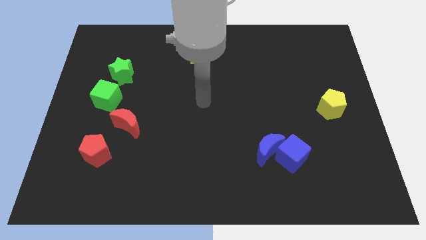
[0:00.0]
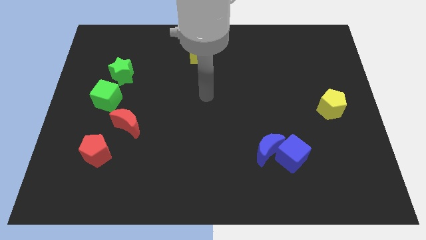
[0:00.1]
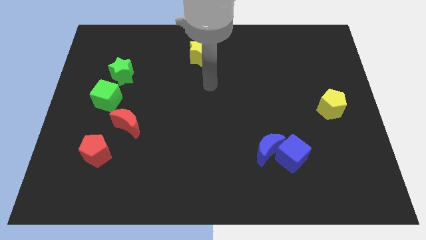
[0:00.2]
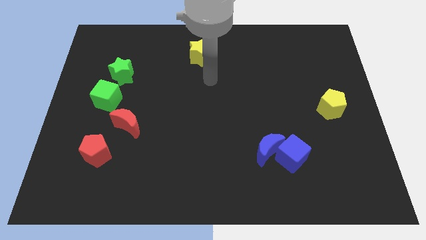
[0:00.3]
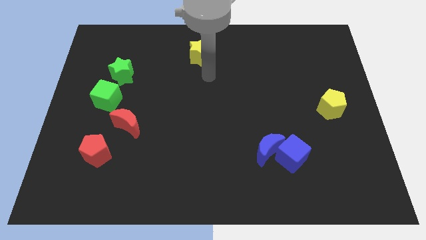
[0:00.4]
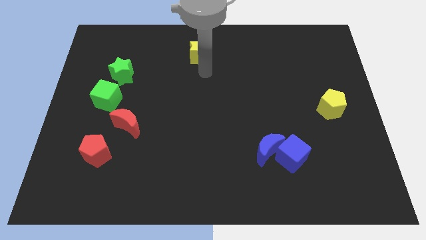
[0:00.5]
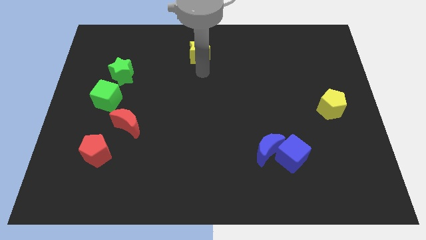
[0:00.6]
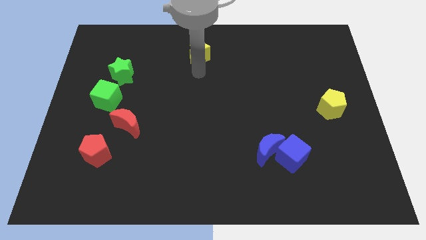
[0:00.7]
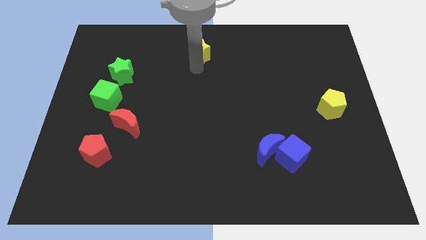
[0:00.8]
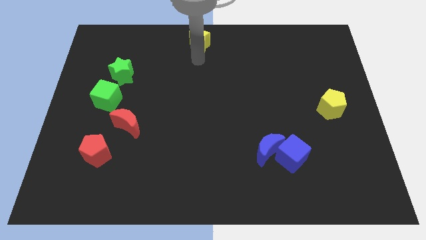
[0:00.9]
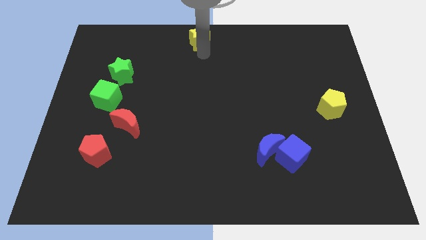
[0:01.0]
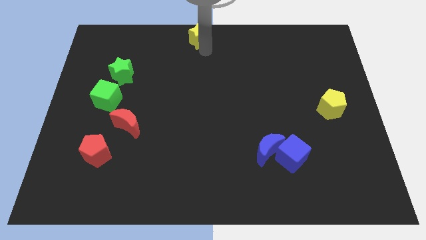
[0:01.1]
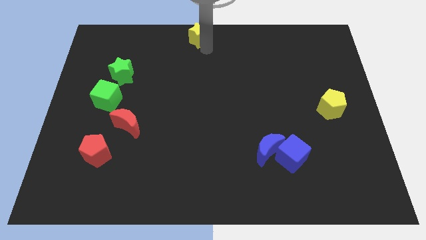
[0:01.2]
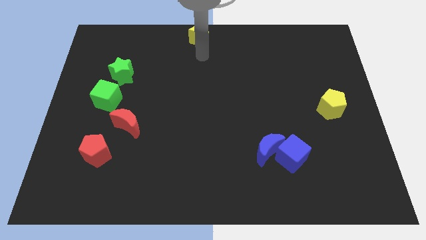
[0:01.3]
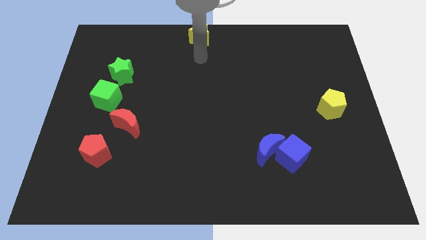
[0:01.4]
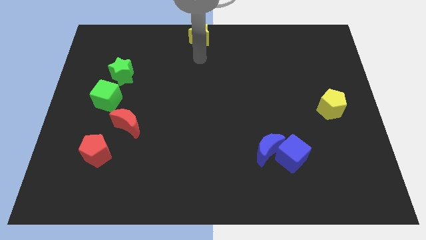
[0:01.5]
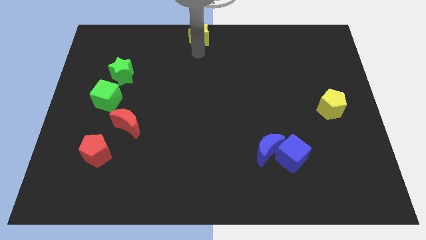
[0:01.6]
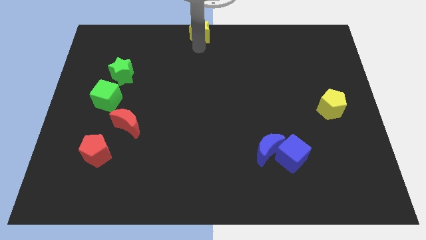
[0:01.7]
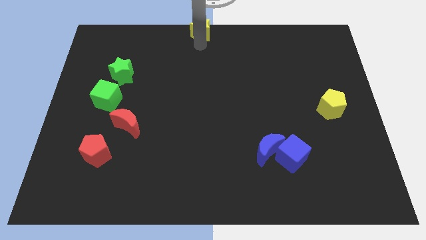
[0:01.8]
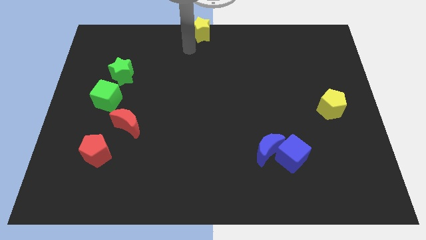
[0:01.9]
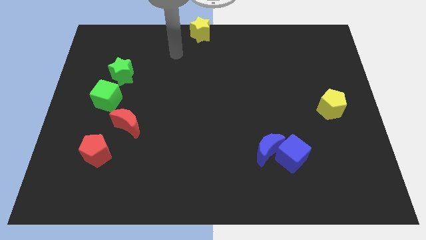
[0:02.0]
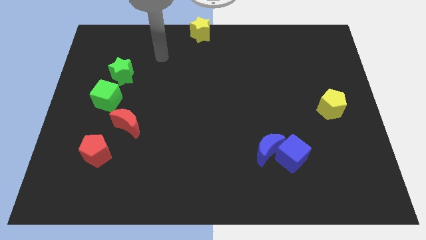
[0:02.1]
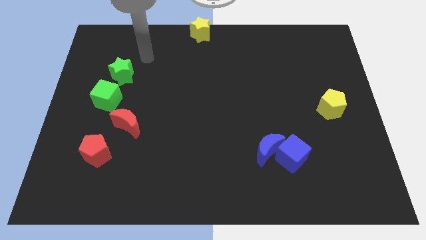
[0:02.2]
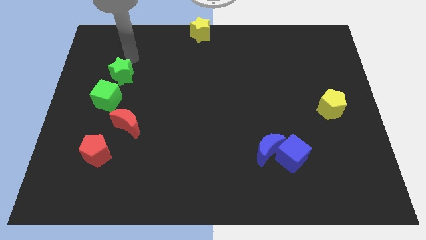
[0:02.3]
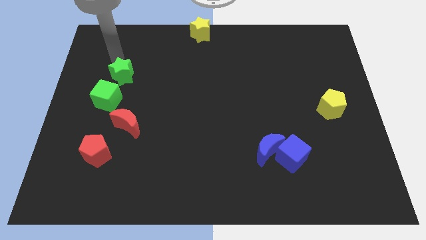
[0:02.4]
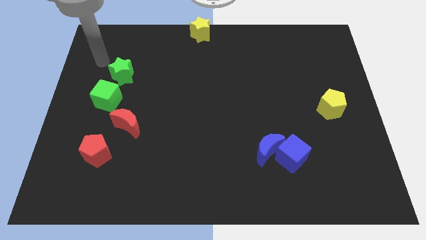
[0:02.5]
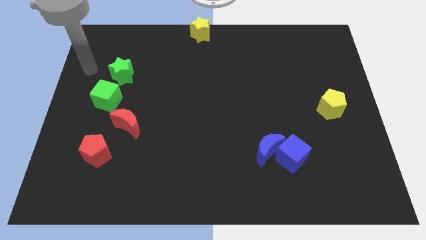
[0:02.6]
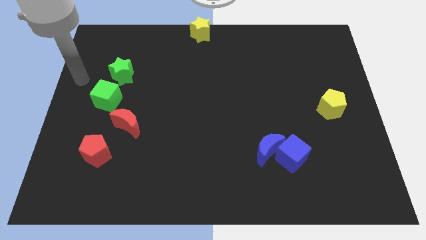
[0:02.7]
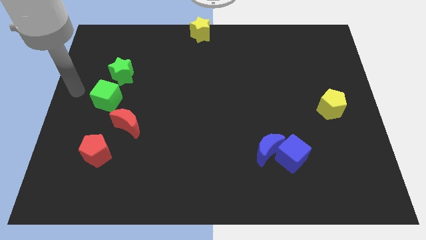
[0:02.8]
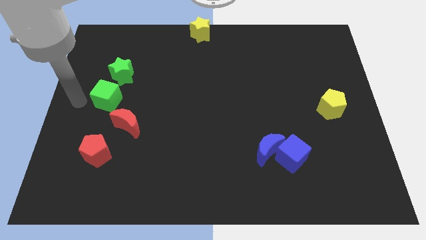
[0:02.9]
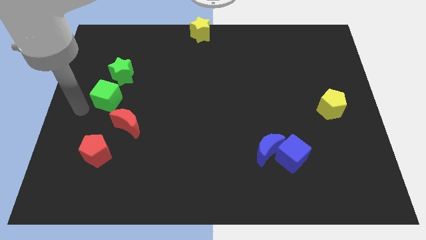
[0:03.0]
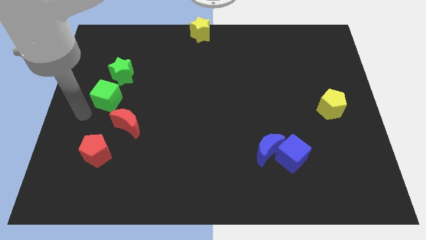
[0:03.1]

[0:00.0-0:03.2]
push the yellow star to the top center

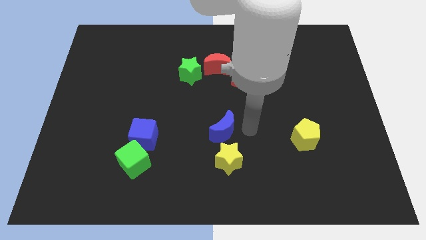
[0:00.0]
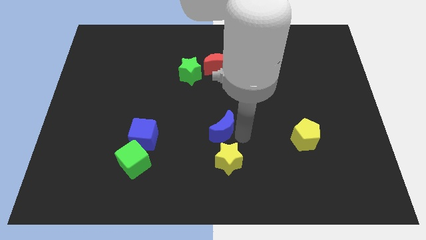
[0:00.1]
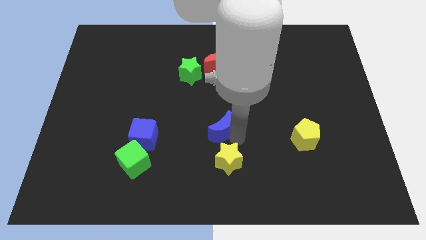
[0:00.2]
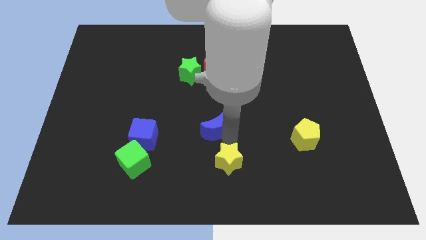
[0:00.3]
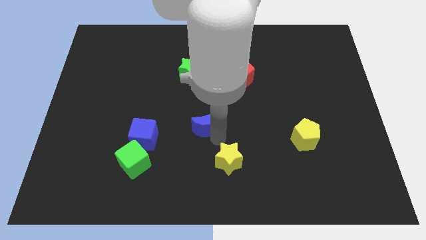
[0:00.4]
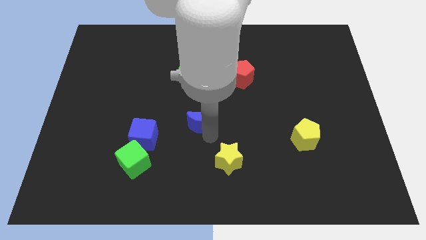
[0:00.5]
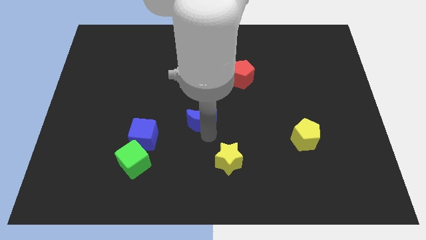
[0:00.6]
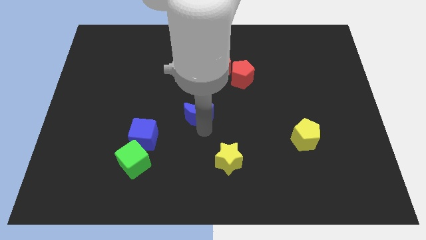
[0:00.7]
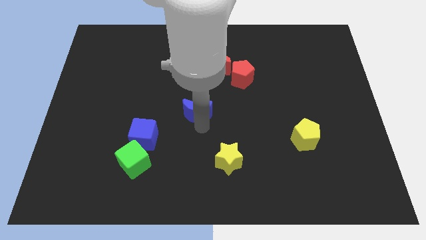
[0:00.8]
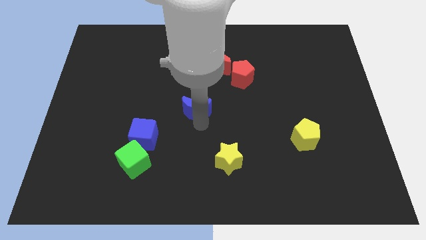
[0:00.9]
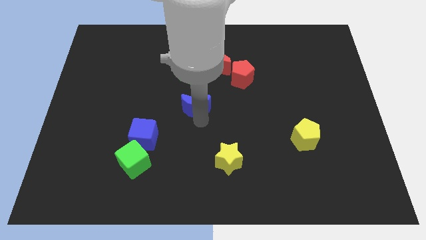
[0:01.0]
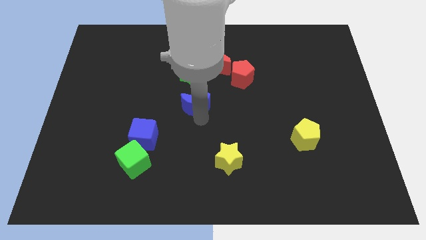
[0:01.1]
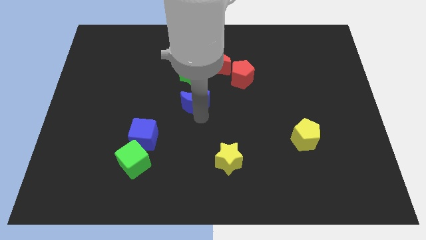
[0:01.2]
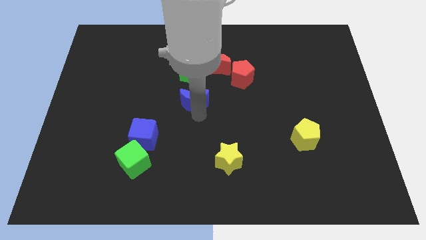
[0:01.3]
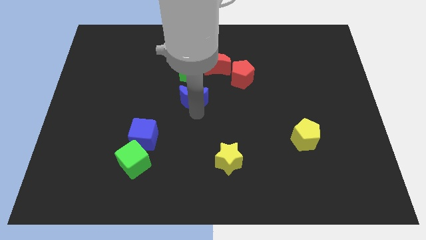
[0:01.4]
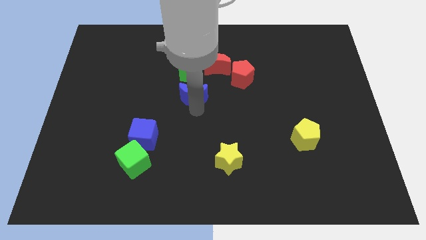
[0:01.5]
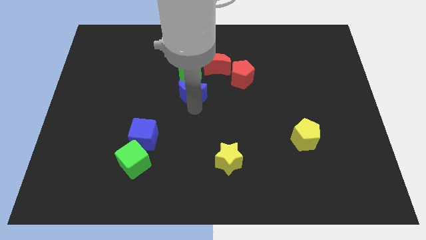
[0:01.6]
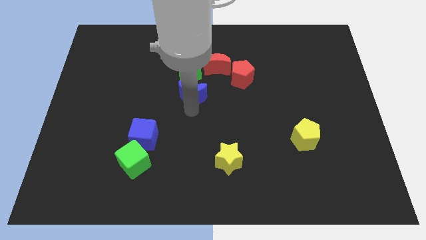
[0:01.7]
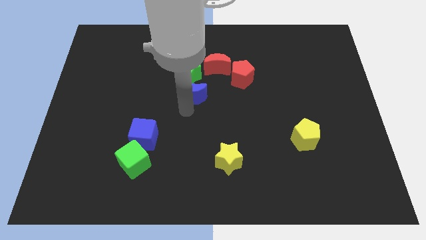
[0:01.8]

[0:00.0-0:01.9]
place blue moon at the bottom of green star

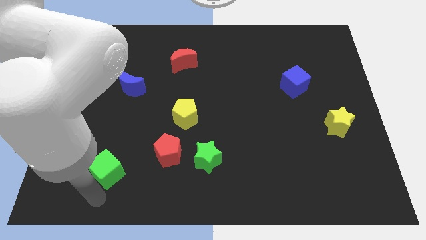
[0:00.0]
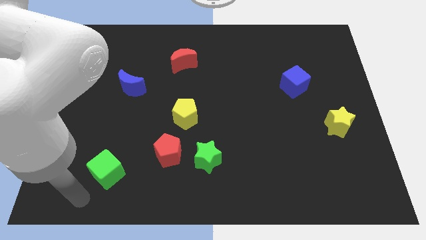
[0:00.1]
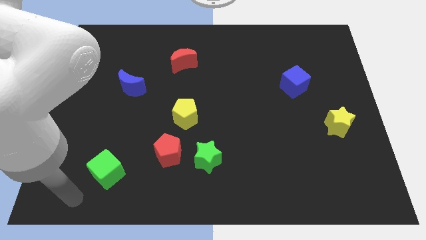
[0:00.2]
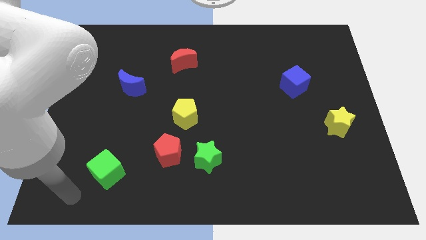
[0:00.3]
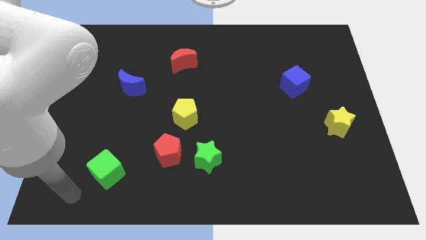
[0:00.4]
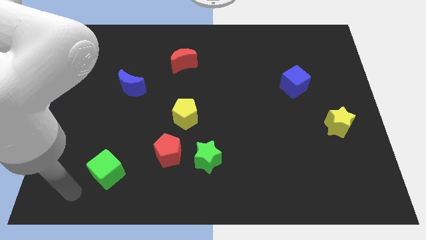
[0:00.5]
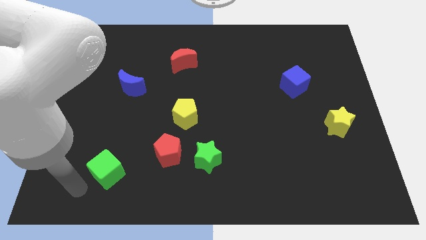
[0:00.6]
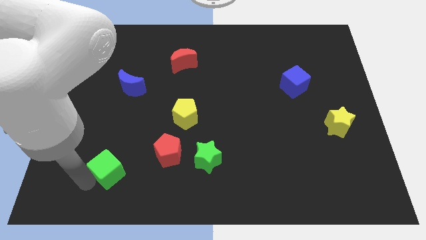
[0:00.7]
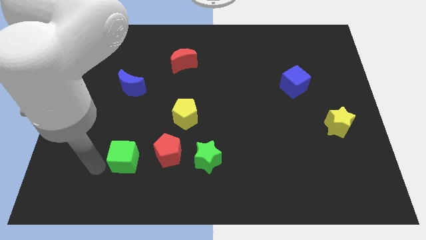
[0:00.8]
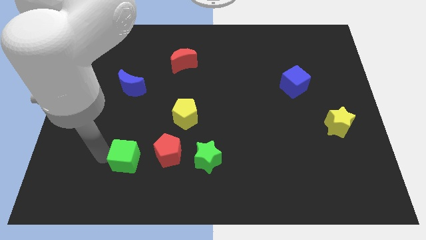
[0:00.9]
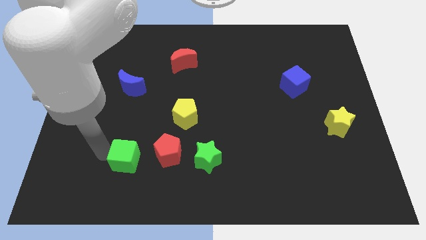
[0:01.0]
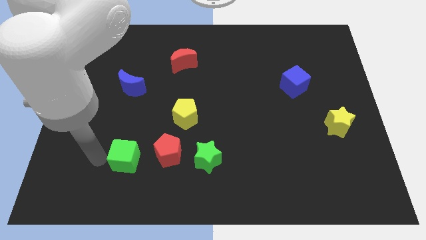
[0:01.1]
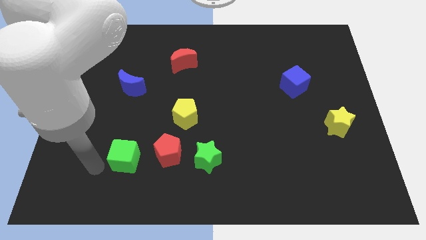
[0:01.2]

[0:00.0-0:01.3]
push the green cube slightly to the left side of the red pentagon

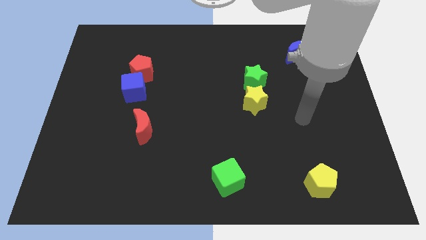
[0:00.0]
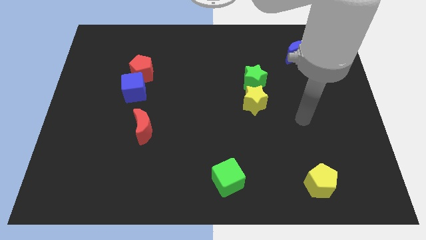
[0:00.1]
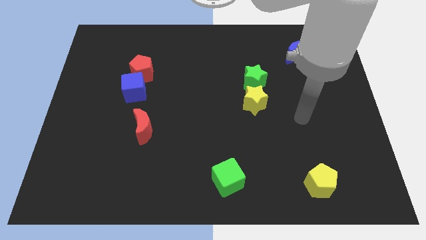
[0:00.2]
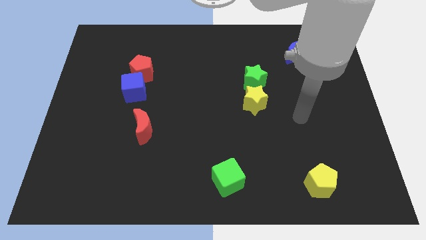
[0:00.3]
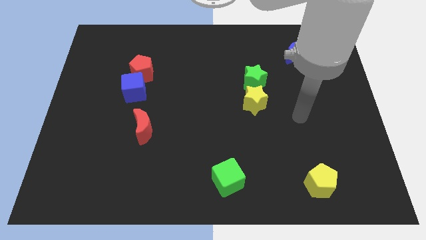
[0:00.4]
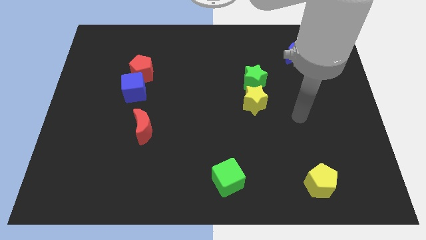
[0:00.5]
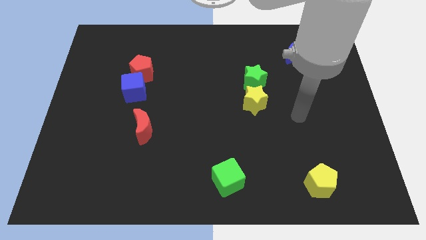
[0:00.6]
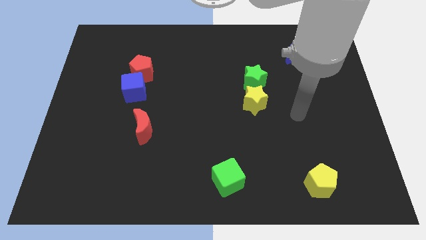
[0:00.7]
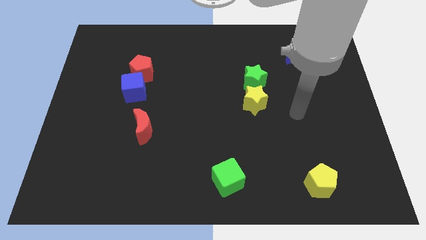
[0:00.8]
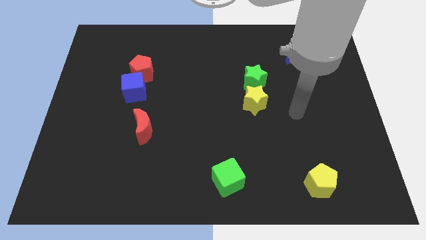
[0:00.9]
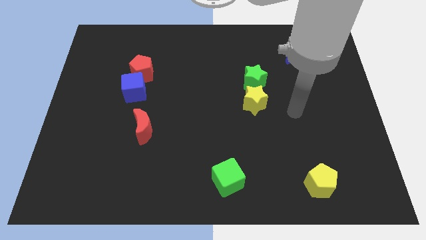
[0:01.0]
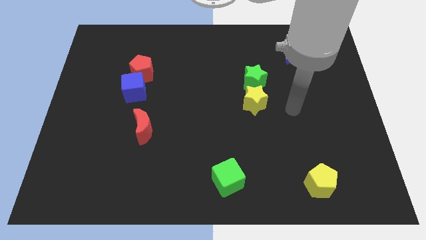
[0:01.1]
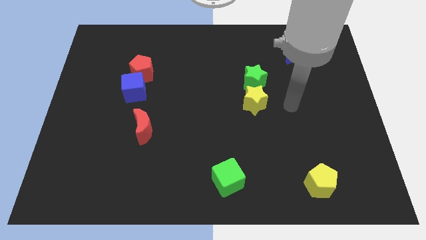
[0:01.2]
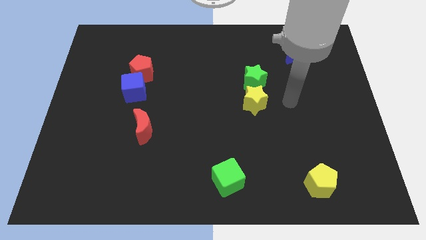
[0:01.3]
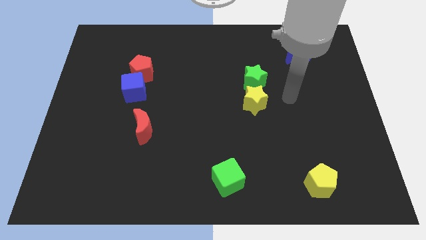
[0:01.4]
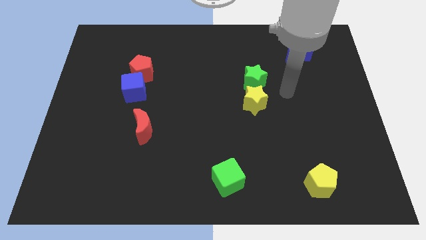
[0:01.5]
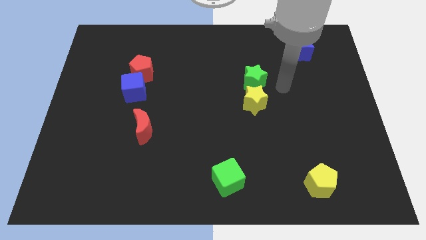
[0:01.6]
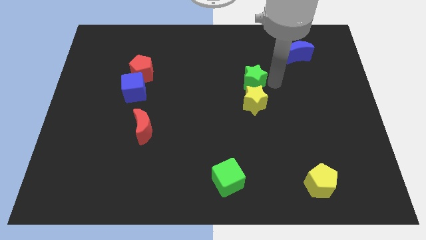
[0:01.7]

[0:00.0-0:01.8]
move your arm to the right of the green star

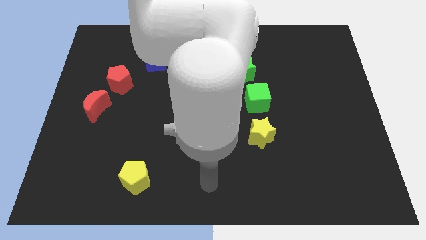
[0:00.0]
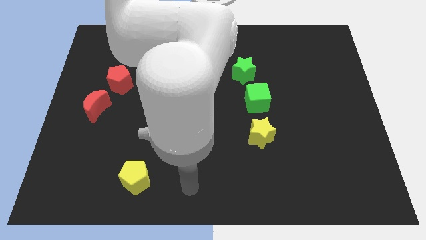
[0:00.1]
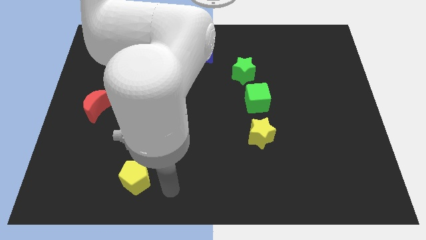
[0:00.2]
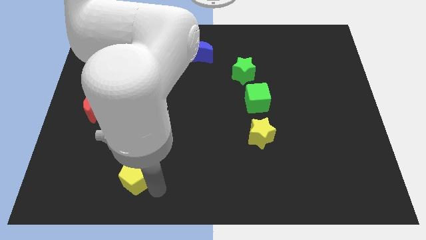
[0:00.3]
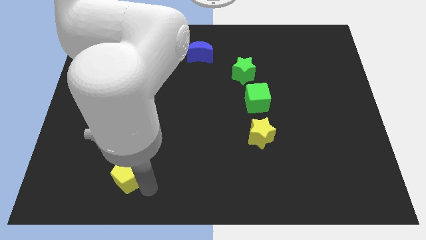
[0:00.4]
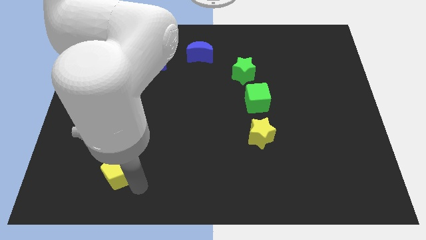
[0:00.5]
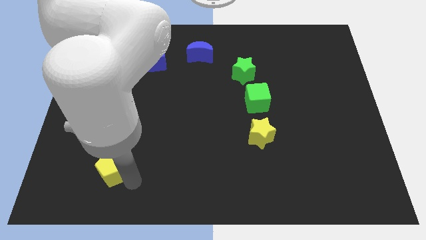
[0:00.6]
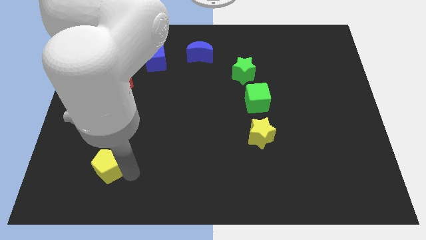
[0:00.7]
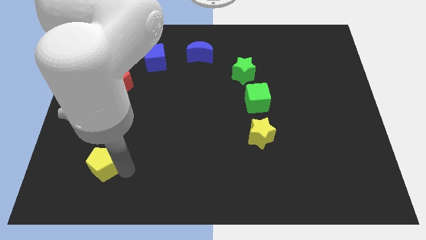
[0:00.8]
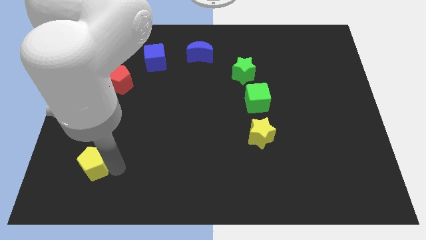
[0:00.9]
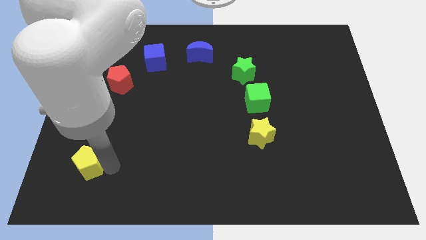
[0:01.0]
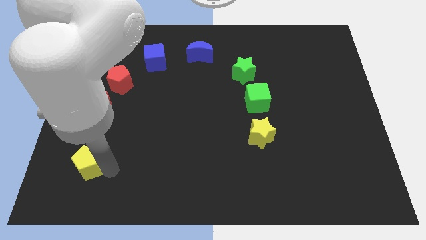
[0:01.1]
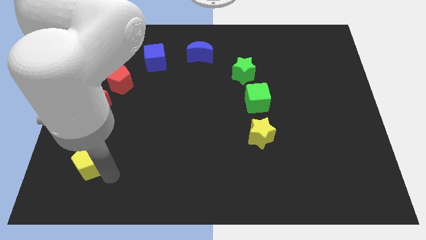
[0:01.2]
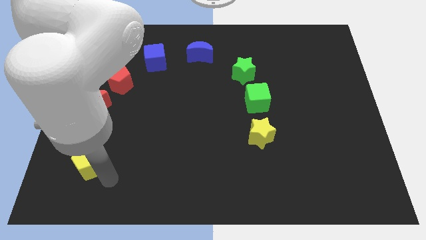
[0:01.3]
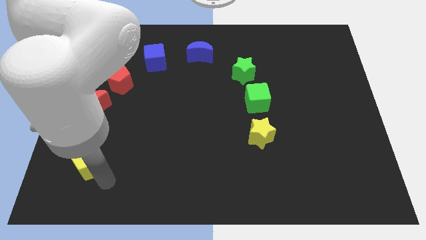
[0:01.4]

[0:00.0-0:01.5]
push the yellow pentagon slightly to the left
